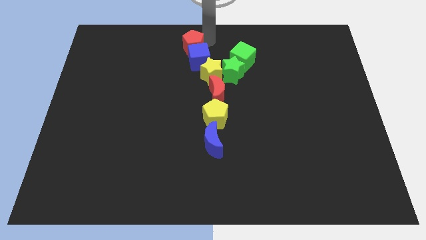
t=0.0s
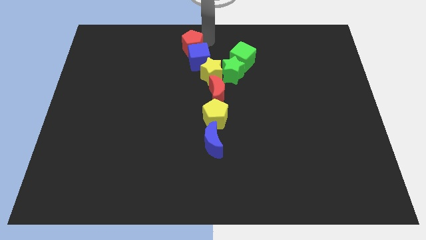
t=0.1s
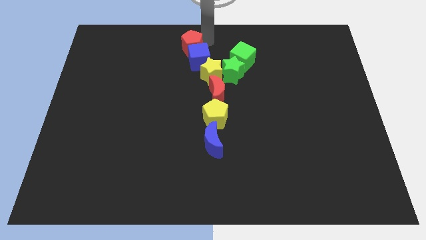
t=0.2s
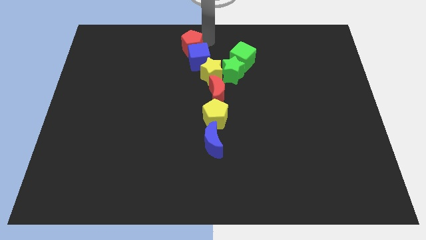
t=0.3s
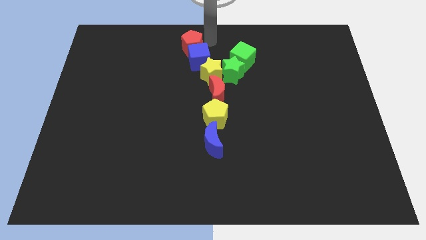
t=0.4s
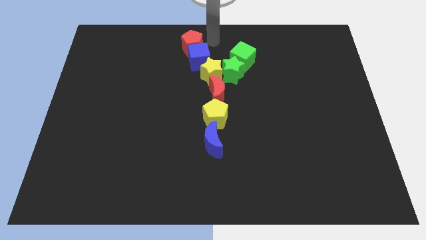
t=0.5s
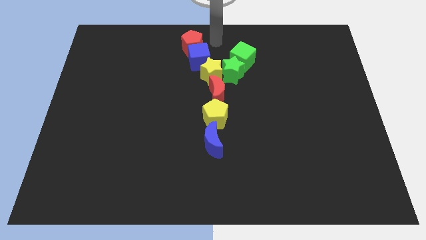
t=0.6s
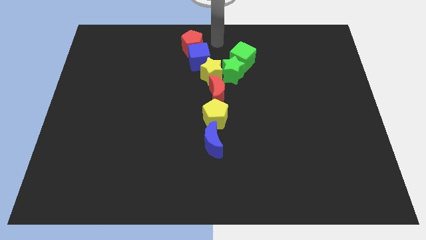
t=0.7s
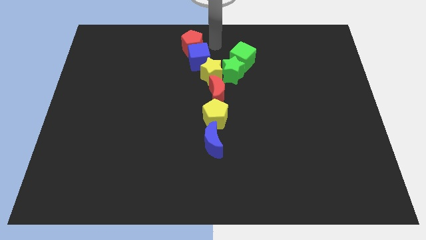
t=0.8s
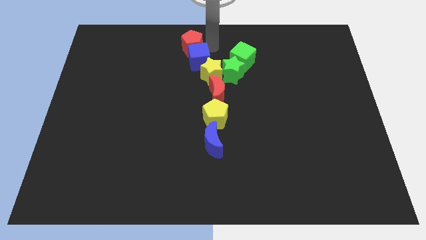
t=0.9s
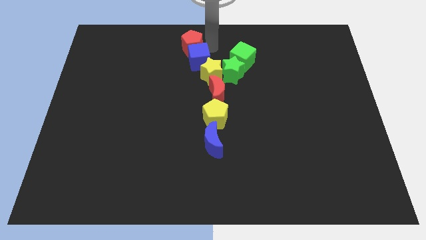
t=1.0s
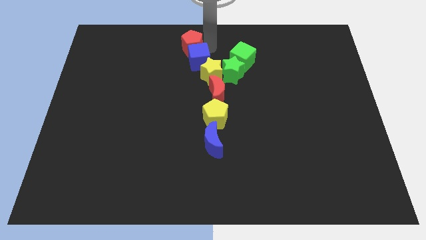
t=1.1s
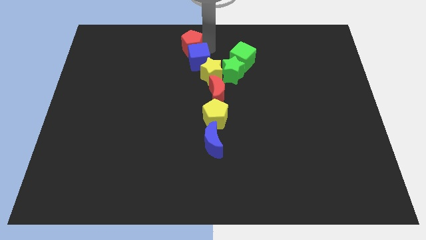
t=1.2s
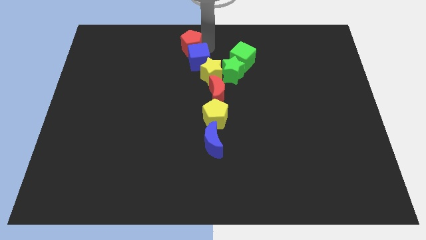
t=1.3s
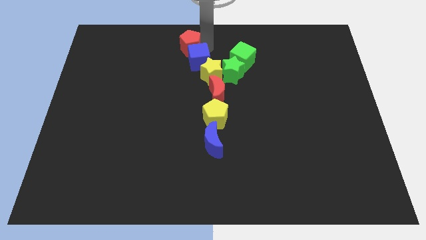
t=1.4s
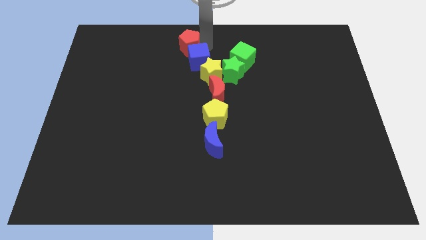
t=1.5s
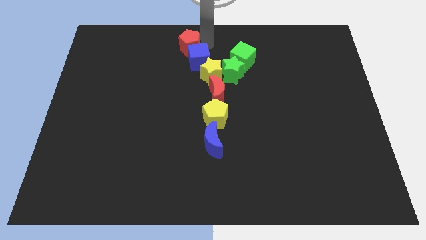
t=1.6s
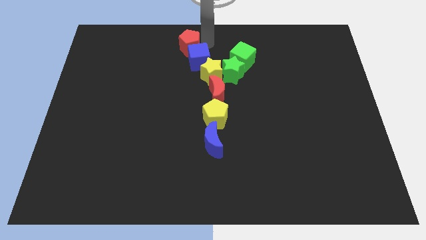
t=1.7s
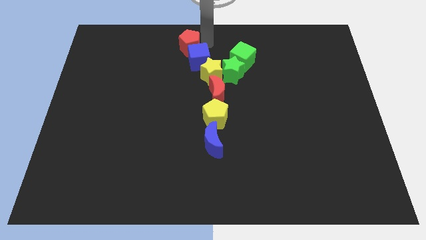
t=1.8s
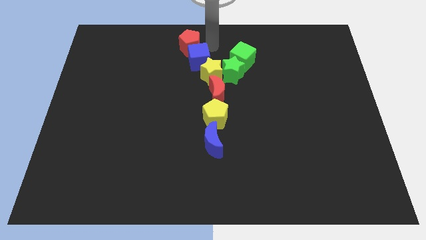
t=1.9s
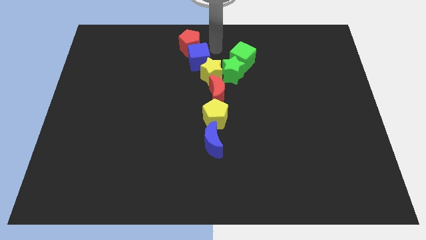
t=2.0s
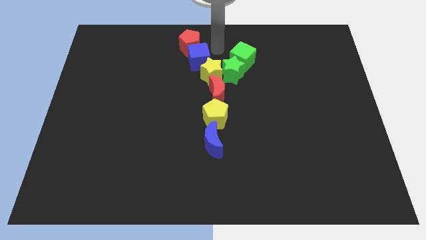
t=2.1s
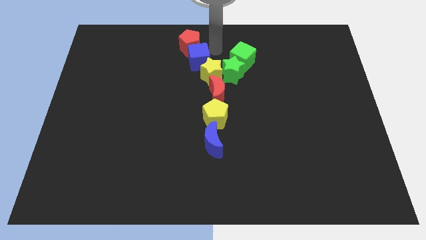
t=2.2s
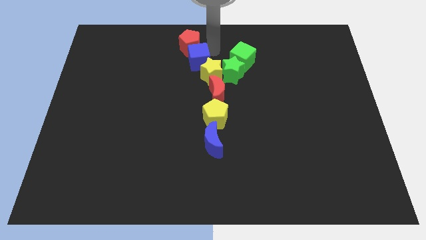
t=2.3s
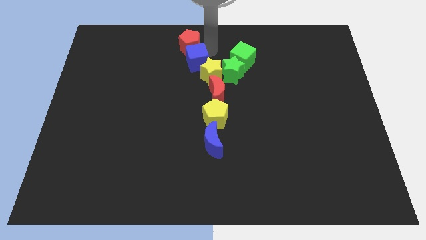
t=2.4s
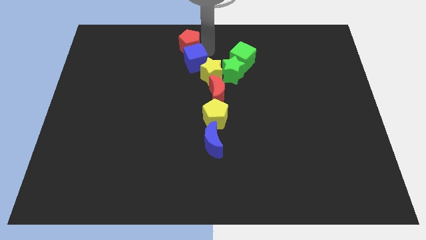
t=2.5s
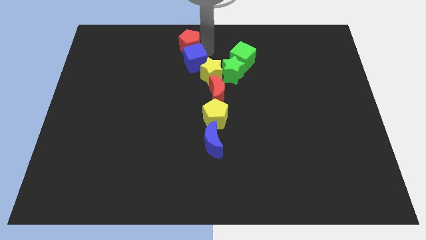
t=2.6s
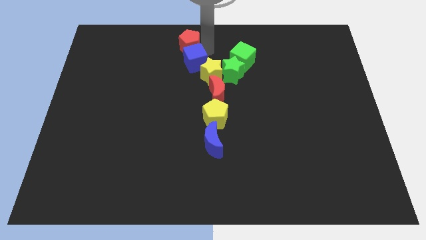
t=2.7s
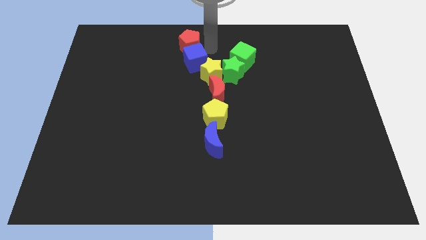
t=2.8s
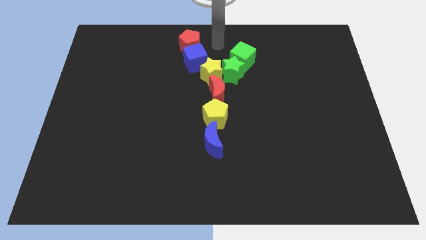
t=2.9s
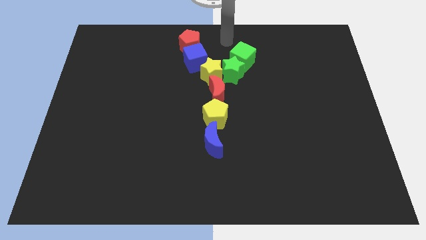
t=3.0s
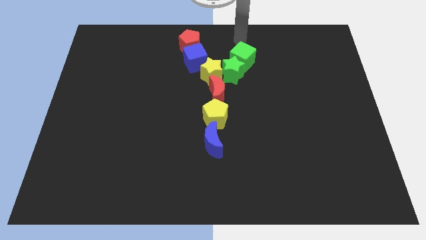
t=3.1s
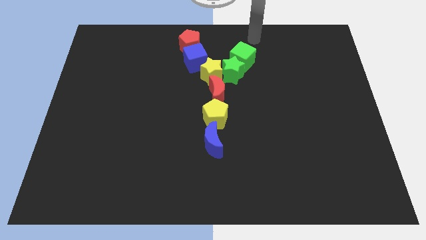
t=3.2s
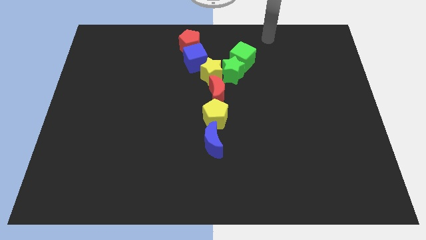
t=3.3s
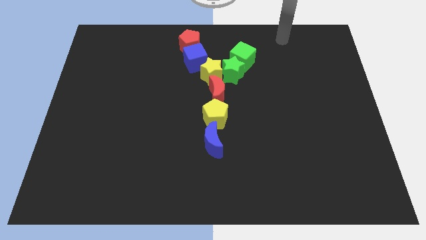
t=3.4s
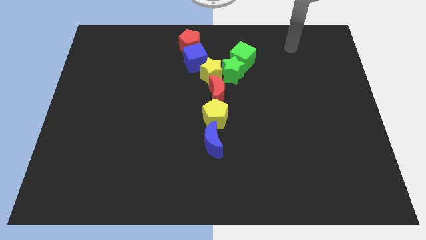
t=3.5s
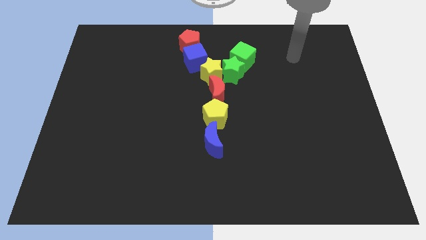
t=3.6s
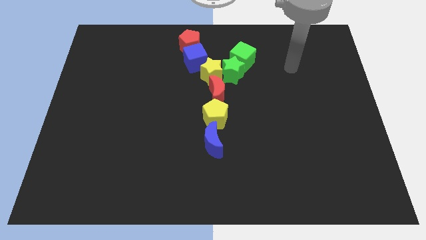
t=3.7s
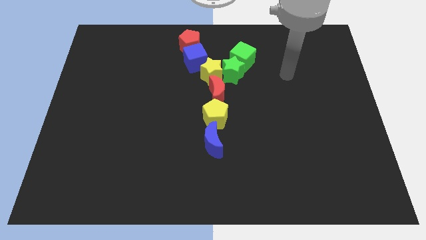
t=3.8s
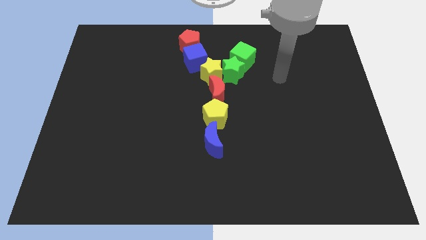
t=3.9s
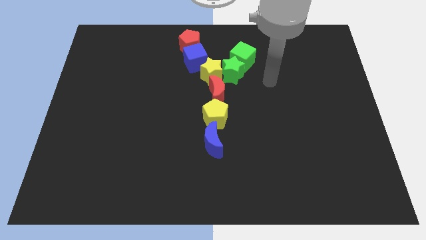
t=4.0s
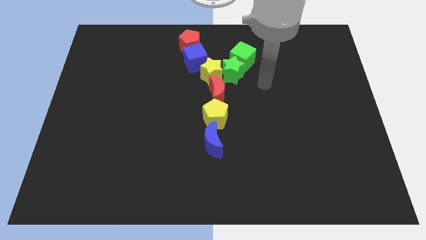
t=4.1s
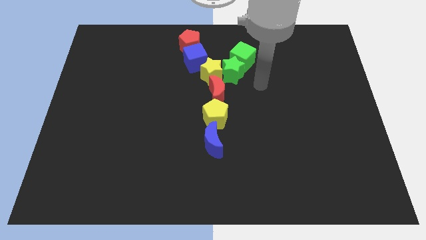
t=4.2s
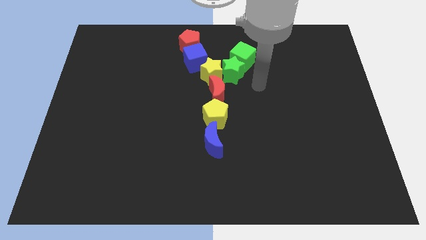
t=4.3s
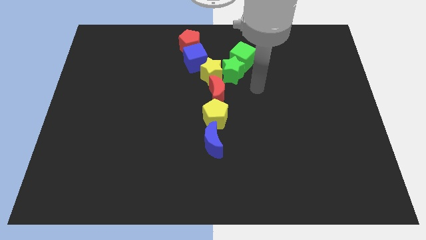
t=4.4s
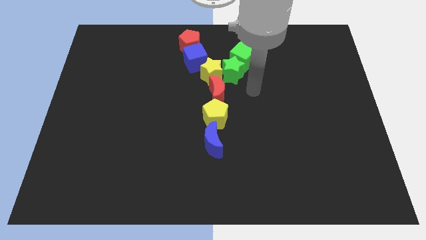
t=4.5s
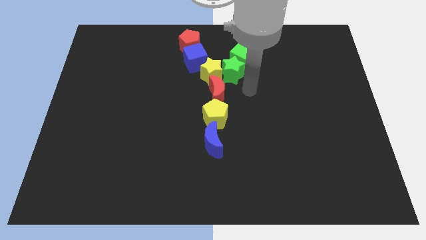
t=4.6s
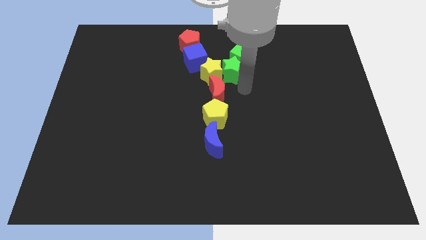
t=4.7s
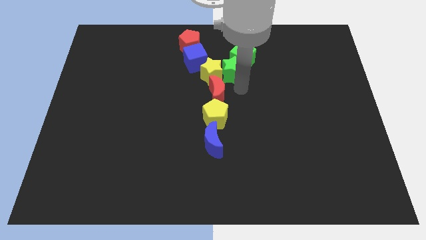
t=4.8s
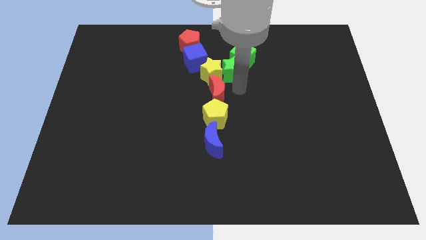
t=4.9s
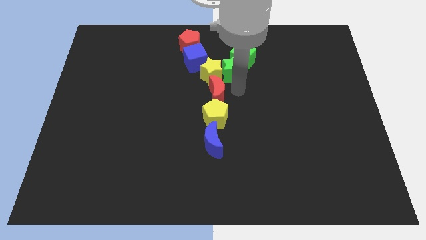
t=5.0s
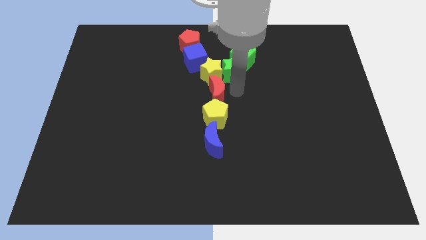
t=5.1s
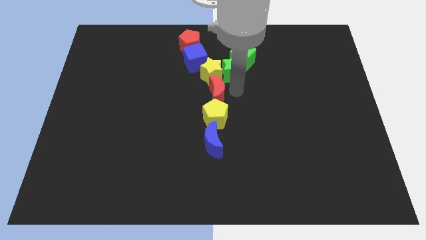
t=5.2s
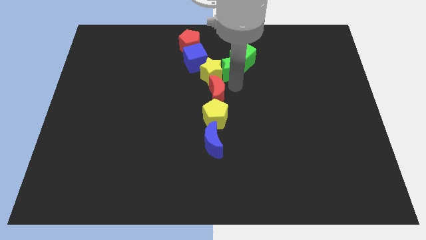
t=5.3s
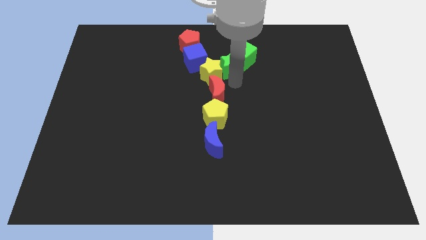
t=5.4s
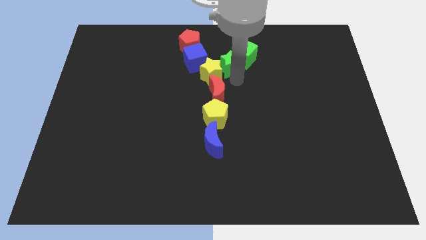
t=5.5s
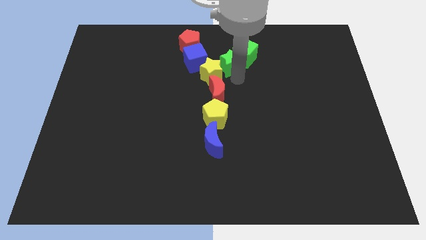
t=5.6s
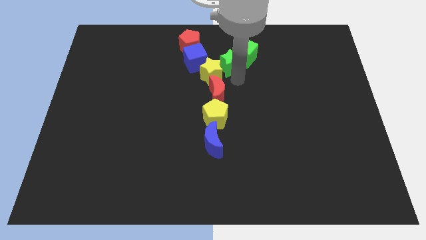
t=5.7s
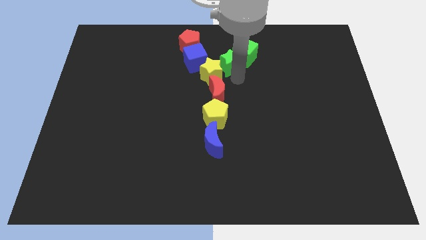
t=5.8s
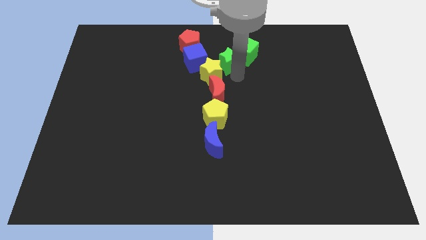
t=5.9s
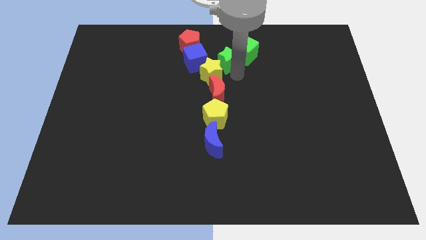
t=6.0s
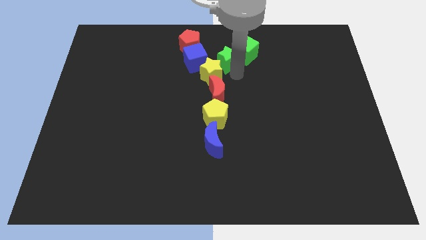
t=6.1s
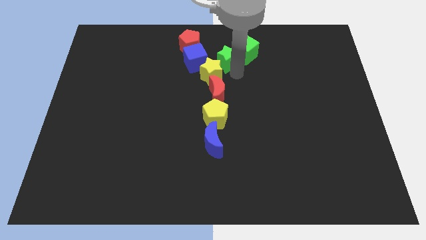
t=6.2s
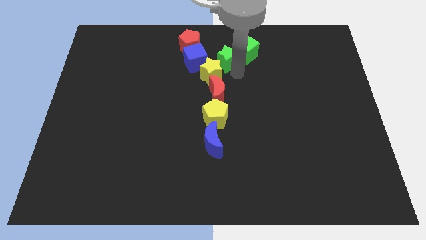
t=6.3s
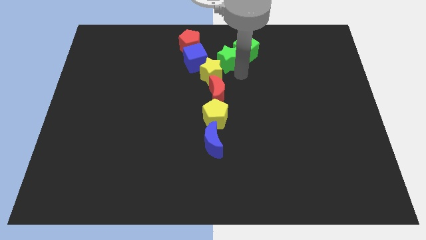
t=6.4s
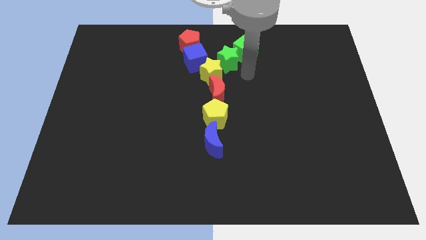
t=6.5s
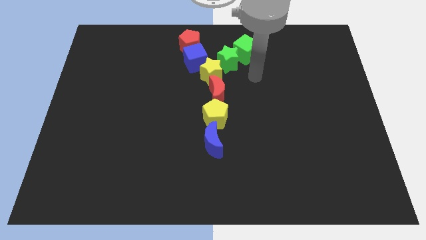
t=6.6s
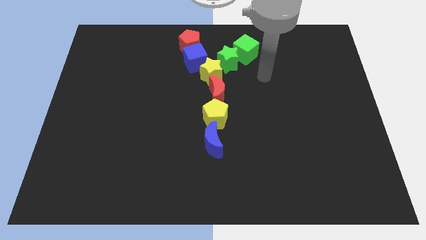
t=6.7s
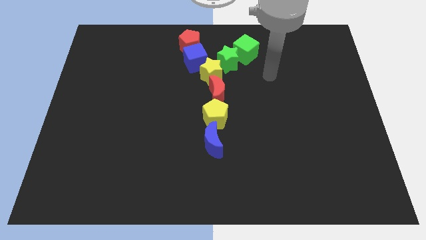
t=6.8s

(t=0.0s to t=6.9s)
adjust the blue cube and the red pentagon to the left

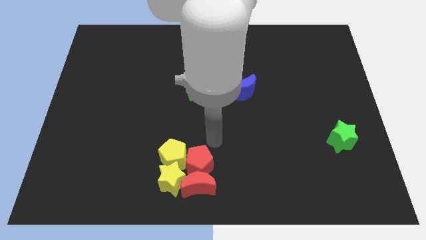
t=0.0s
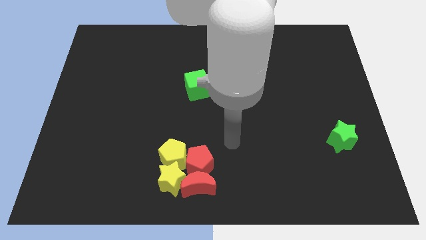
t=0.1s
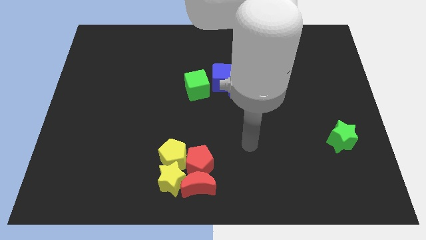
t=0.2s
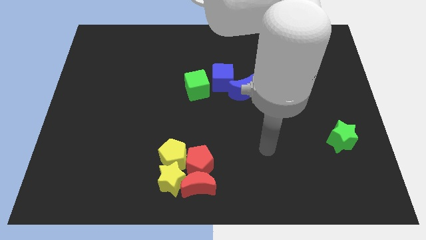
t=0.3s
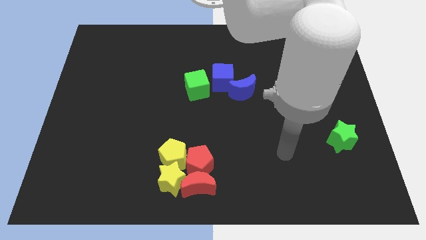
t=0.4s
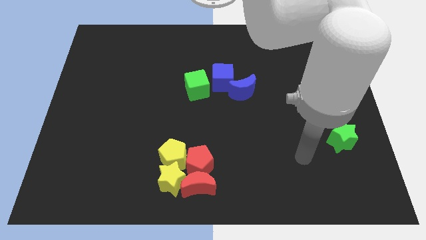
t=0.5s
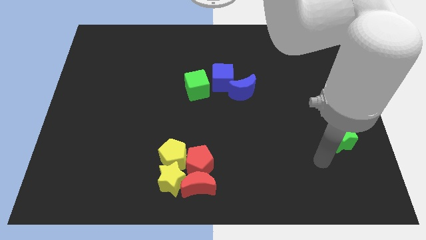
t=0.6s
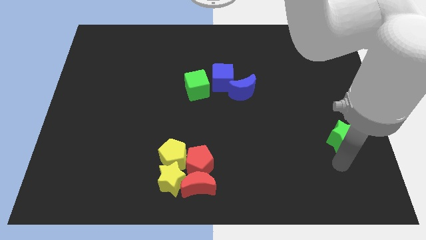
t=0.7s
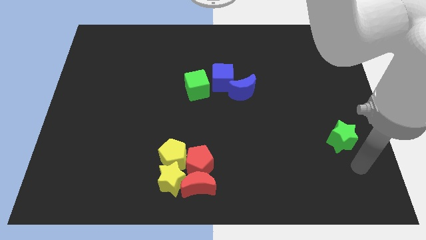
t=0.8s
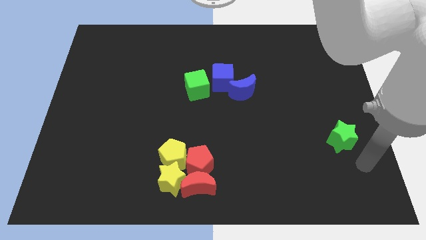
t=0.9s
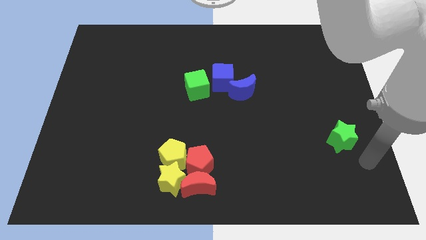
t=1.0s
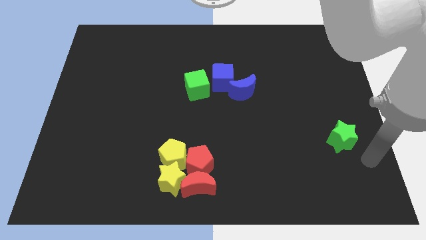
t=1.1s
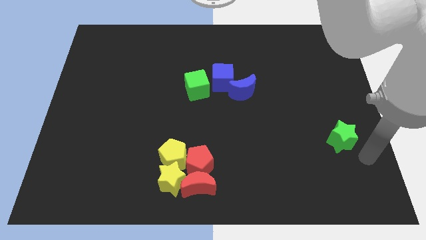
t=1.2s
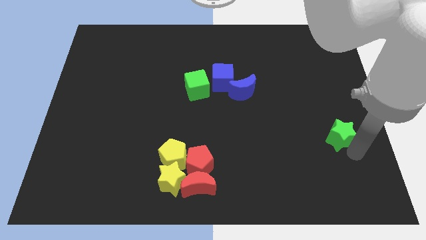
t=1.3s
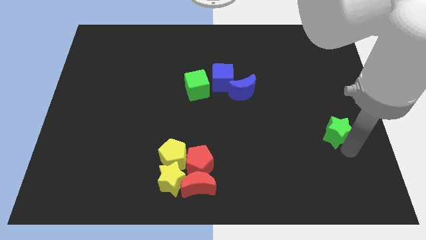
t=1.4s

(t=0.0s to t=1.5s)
tap the bottom right side of the green star

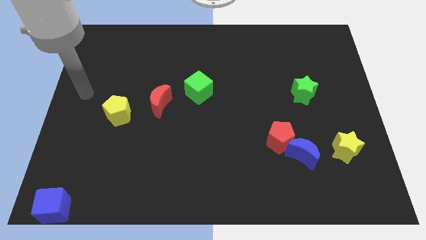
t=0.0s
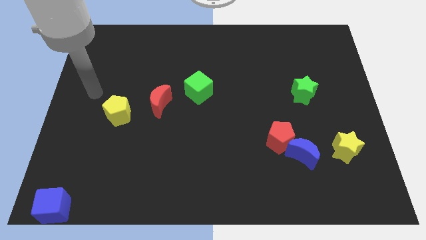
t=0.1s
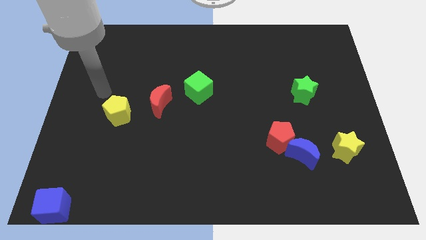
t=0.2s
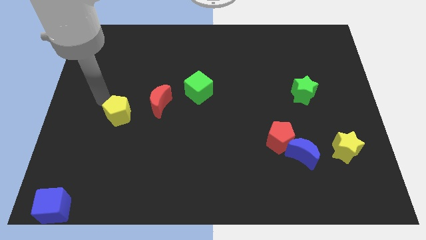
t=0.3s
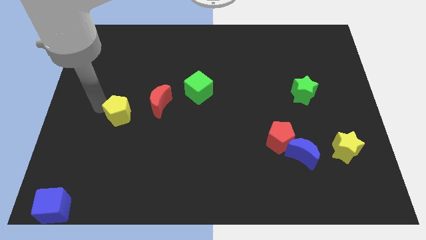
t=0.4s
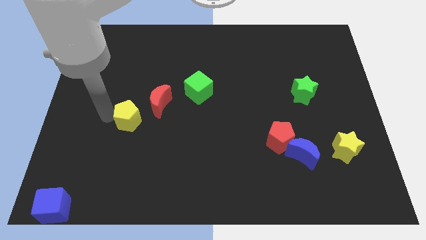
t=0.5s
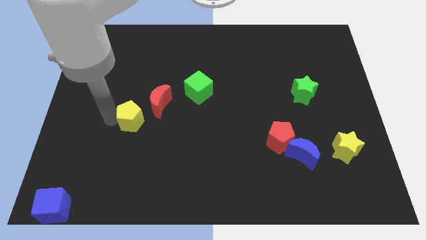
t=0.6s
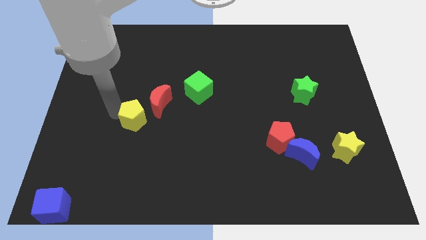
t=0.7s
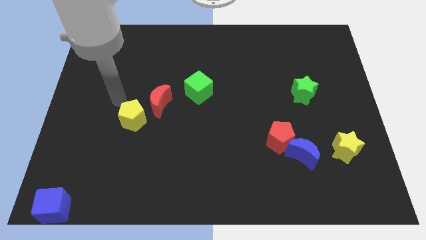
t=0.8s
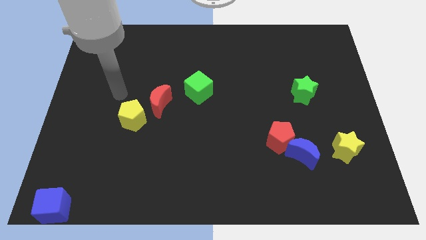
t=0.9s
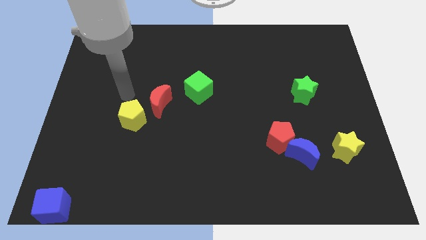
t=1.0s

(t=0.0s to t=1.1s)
move the yellow pentagon left to the red moon
